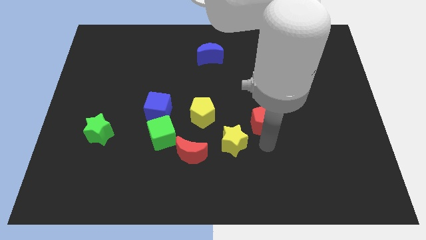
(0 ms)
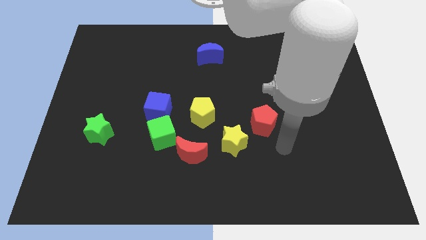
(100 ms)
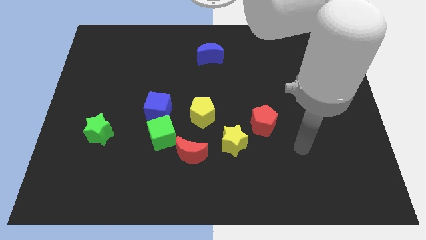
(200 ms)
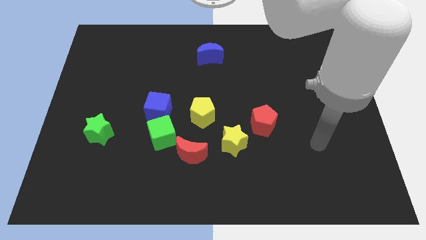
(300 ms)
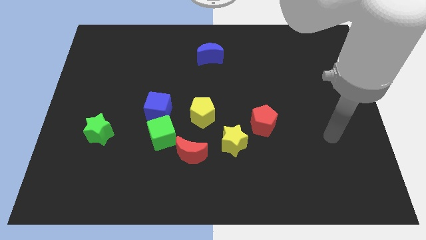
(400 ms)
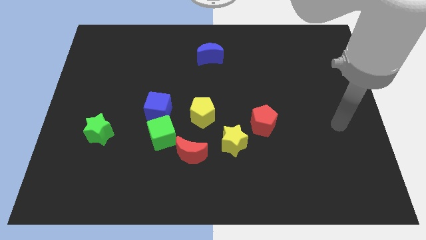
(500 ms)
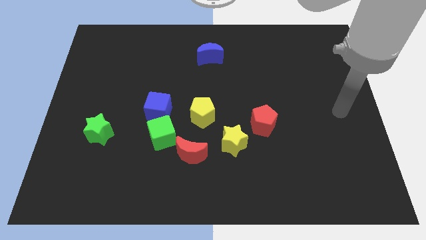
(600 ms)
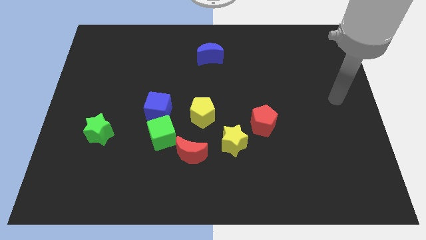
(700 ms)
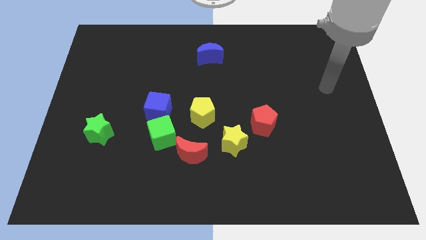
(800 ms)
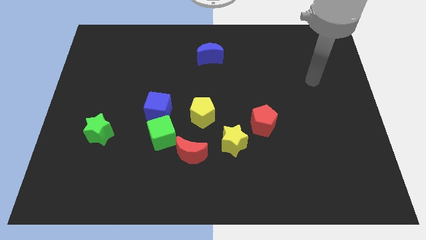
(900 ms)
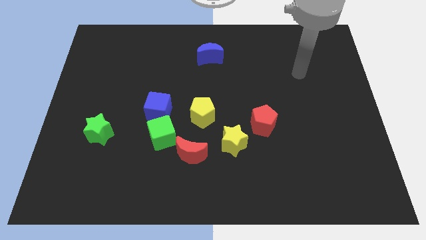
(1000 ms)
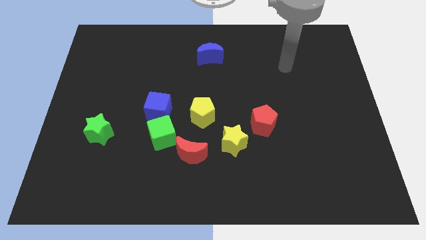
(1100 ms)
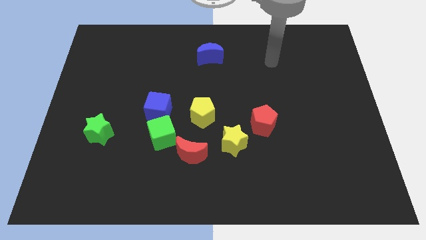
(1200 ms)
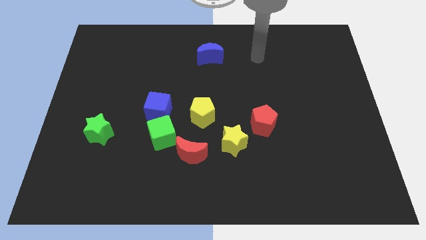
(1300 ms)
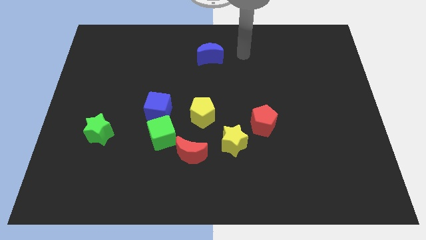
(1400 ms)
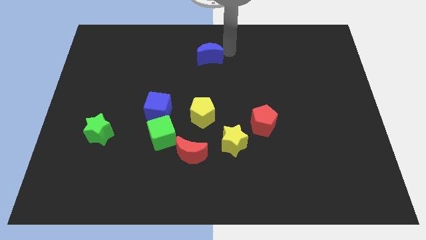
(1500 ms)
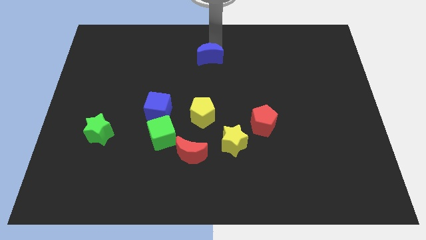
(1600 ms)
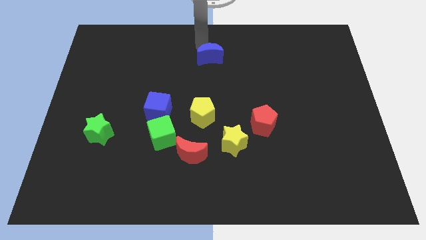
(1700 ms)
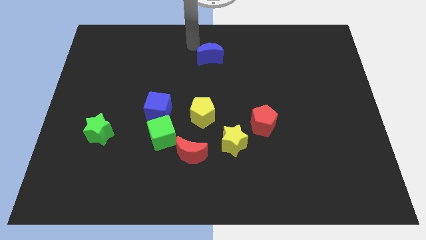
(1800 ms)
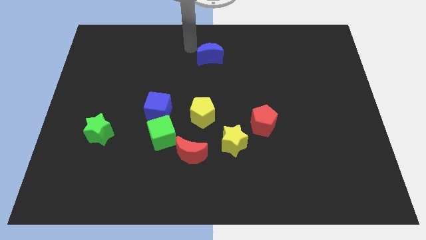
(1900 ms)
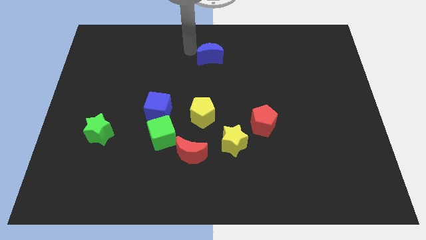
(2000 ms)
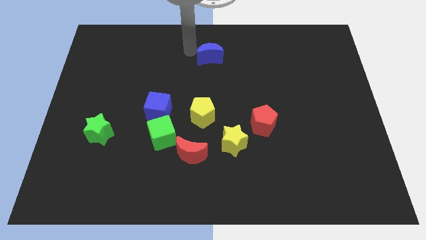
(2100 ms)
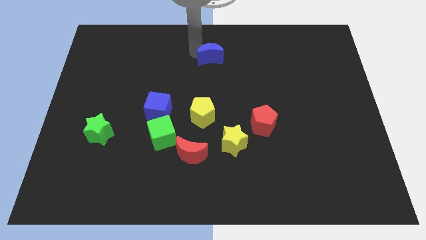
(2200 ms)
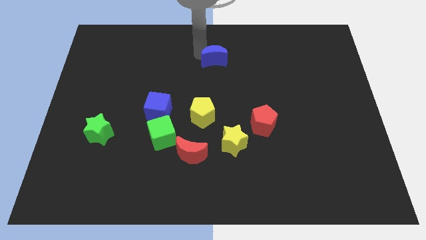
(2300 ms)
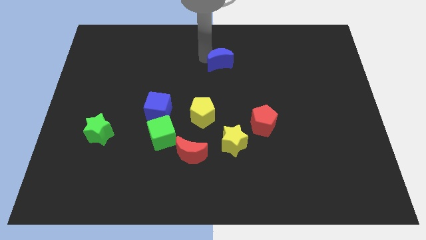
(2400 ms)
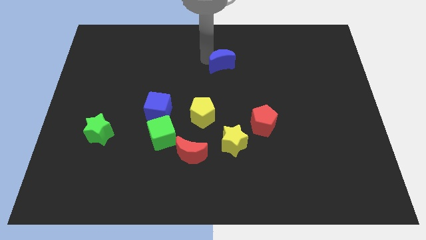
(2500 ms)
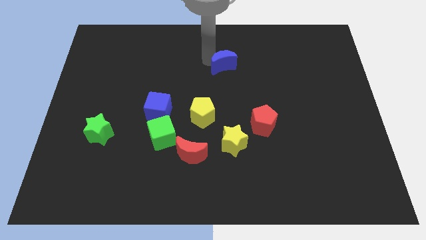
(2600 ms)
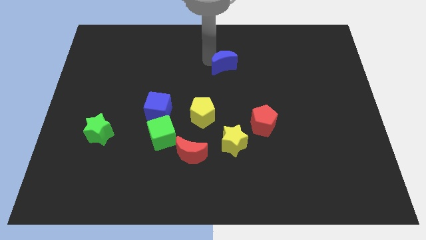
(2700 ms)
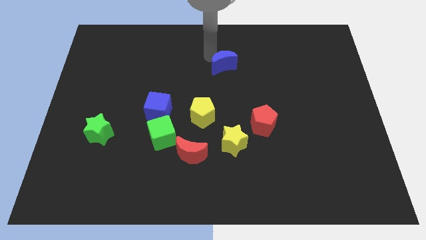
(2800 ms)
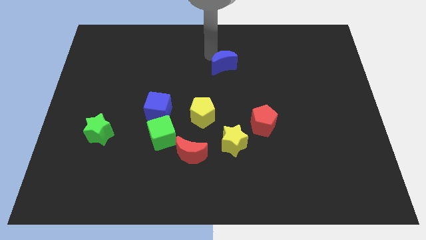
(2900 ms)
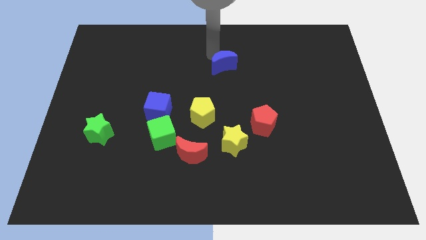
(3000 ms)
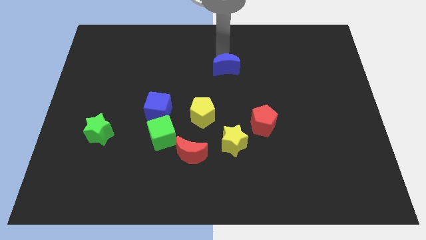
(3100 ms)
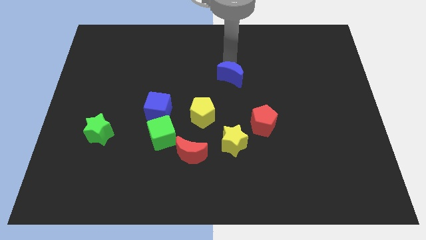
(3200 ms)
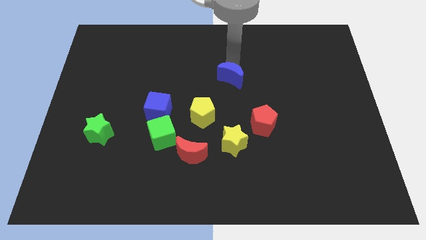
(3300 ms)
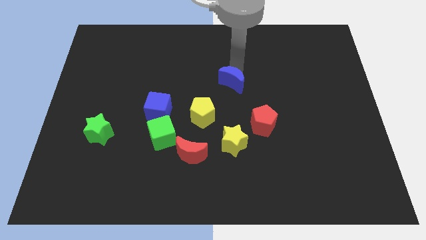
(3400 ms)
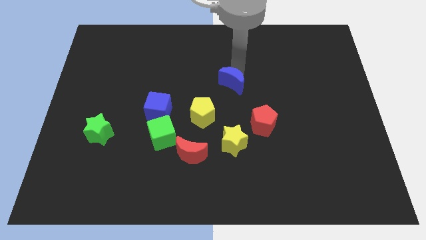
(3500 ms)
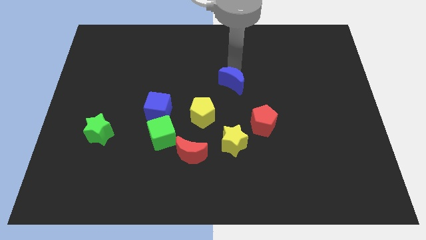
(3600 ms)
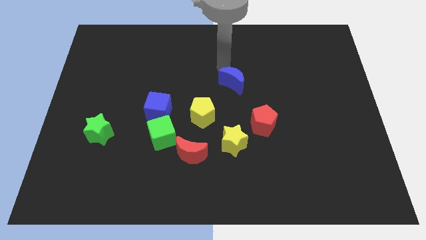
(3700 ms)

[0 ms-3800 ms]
move the blue moon diagonally top right to the yellow pentagon

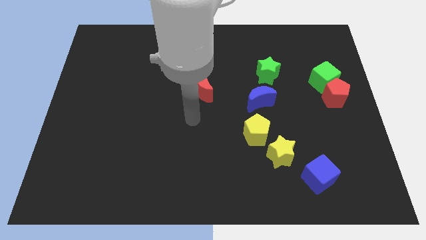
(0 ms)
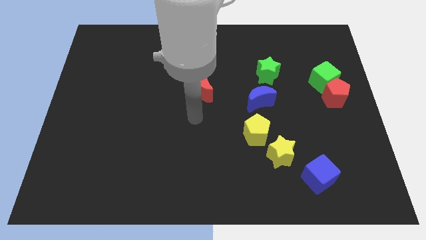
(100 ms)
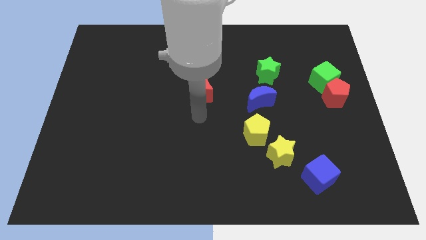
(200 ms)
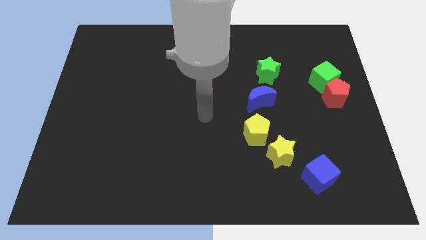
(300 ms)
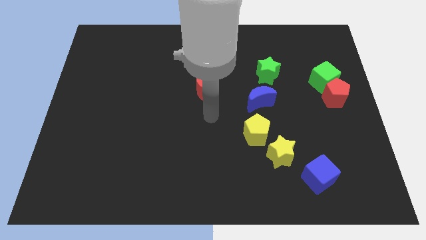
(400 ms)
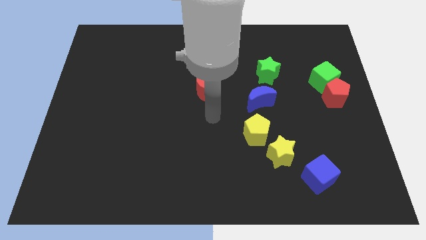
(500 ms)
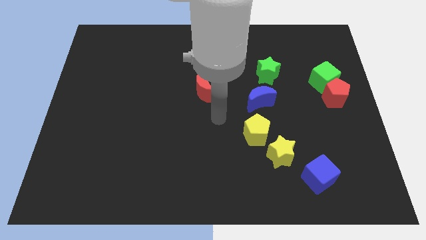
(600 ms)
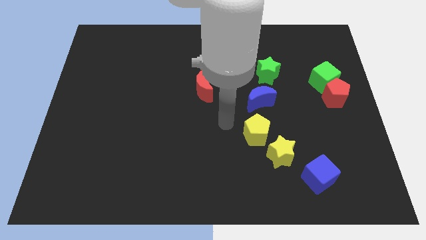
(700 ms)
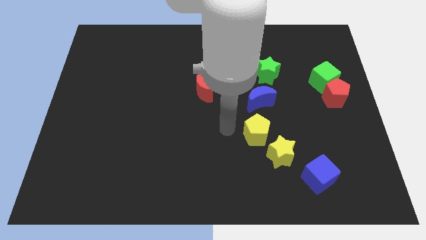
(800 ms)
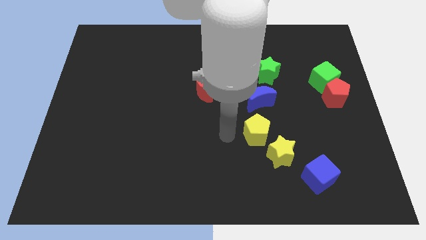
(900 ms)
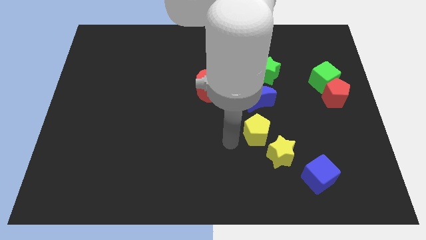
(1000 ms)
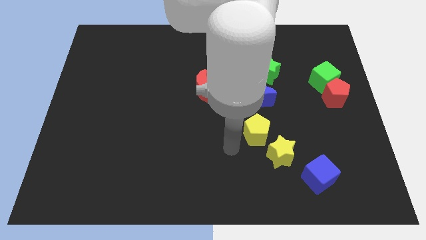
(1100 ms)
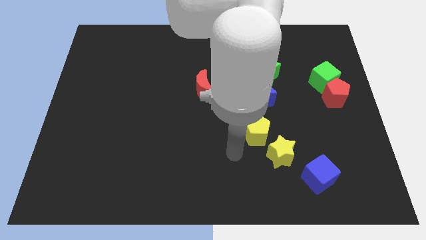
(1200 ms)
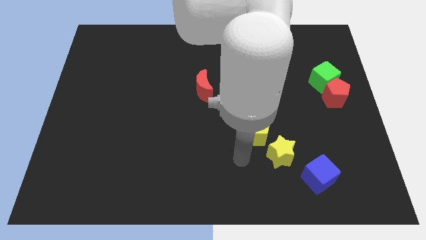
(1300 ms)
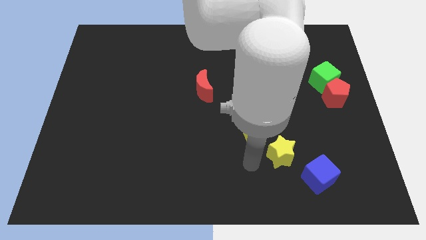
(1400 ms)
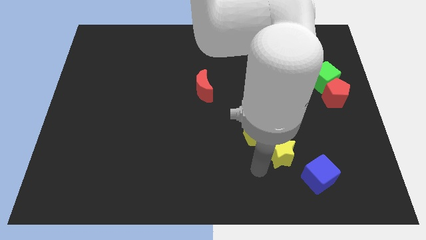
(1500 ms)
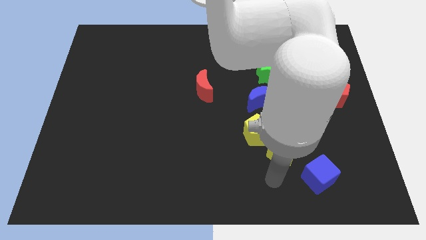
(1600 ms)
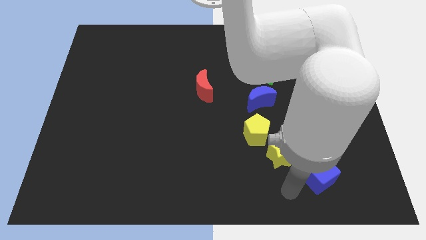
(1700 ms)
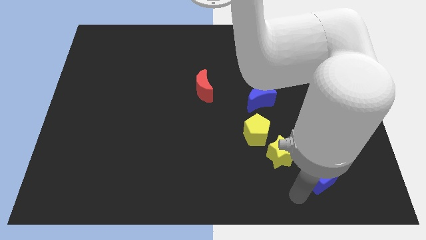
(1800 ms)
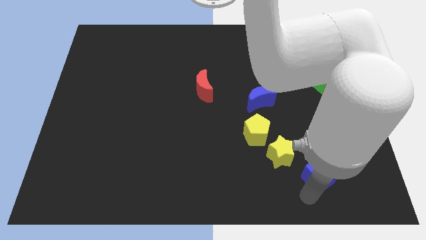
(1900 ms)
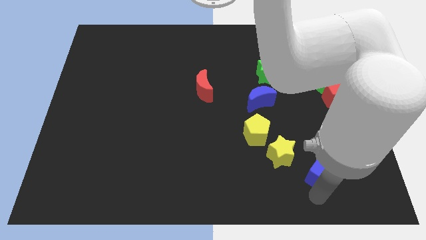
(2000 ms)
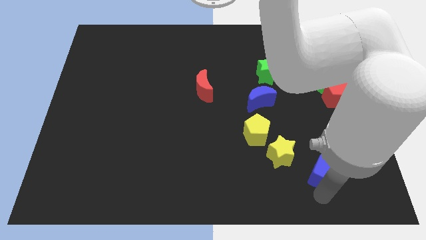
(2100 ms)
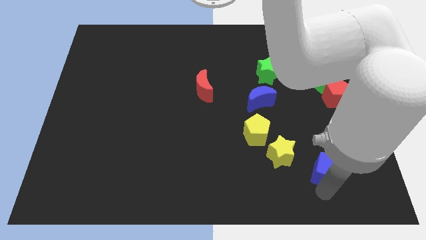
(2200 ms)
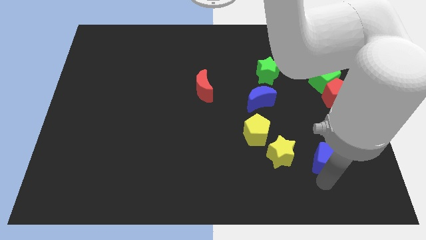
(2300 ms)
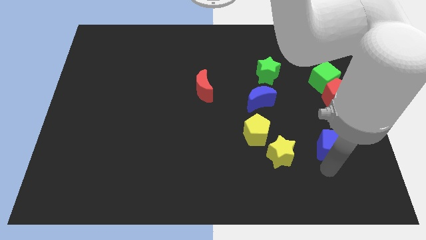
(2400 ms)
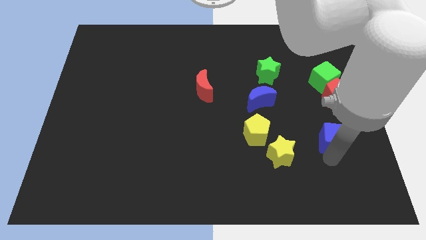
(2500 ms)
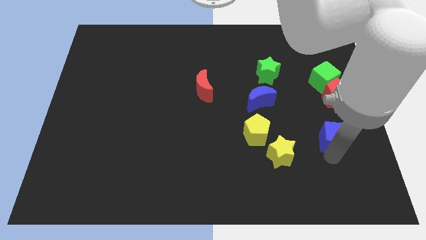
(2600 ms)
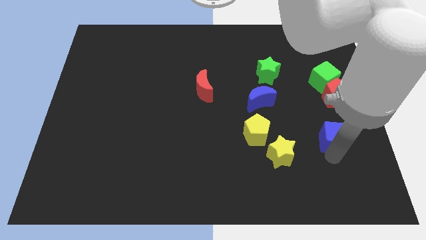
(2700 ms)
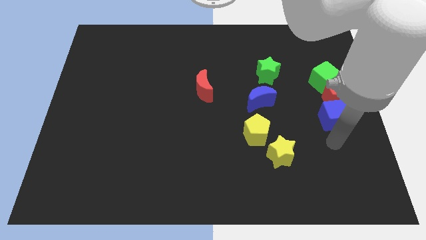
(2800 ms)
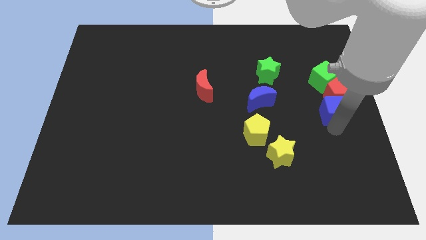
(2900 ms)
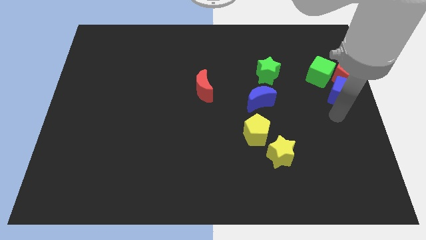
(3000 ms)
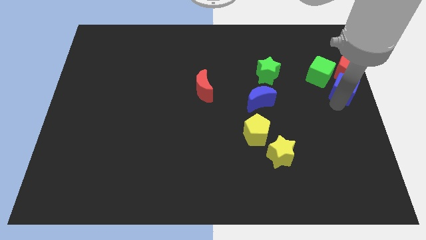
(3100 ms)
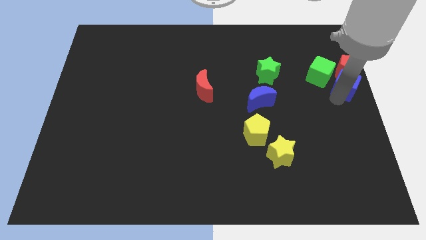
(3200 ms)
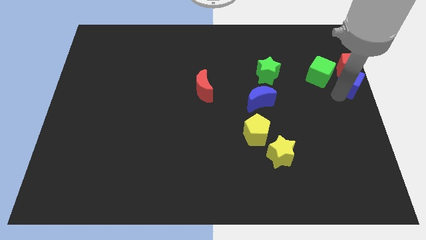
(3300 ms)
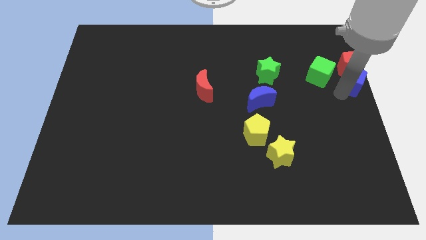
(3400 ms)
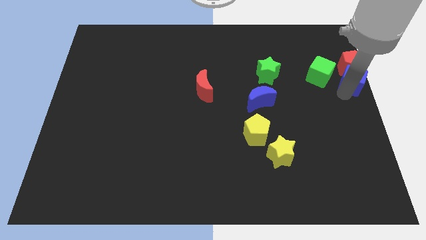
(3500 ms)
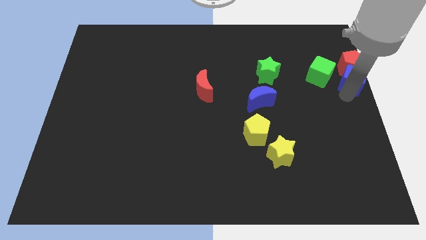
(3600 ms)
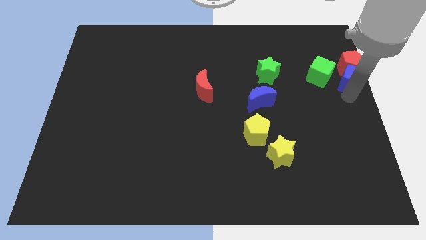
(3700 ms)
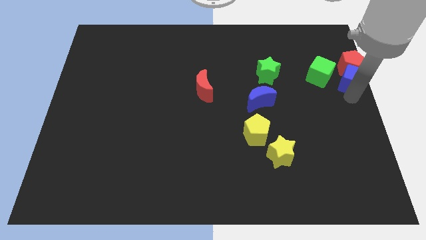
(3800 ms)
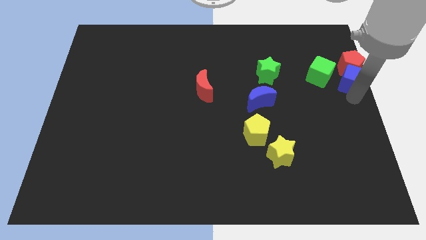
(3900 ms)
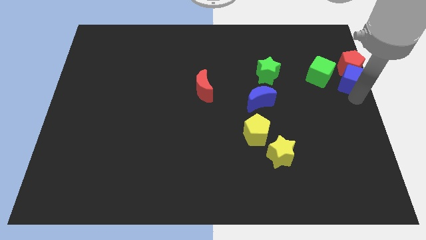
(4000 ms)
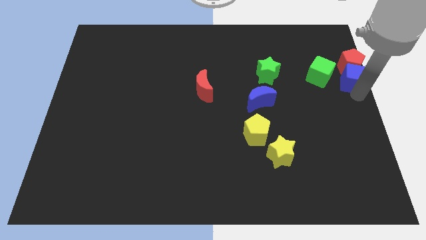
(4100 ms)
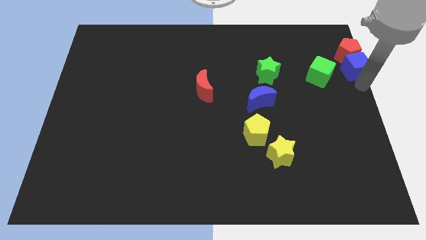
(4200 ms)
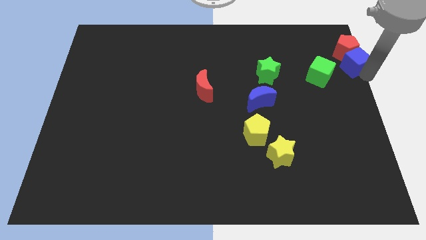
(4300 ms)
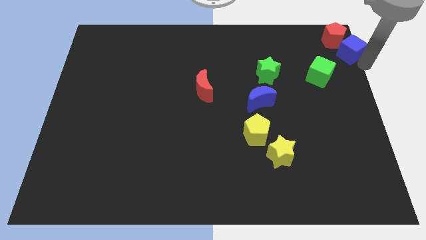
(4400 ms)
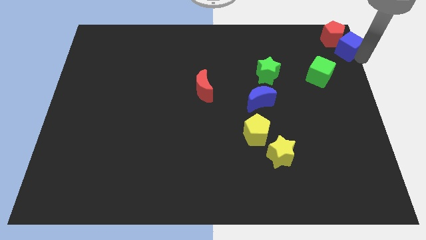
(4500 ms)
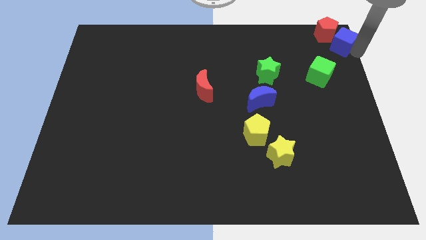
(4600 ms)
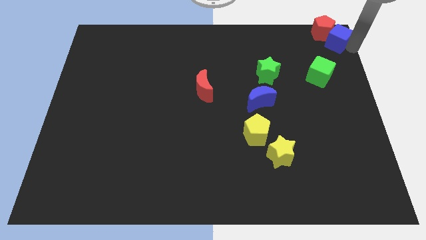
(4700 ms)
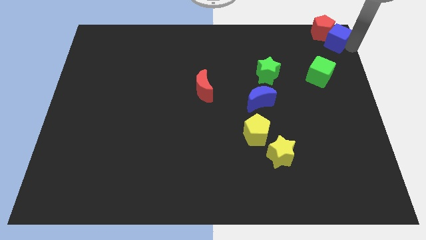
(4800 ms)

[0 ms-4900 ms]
push the blue cube and red pentagon to the top right corner

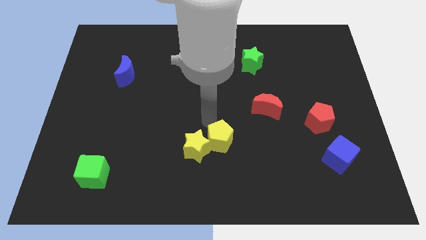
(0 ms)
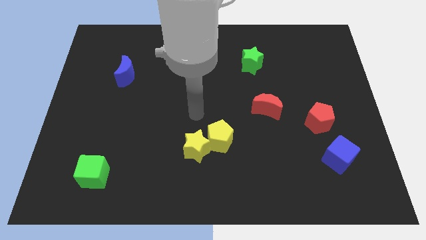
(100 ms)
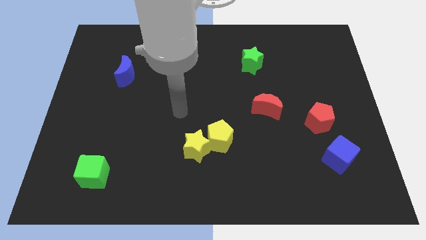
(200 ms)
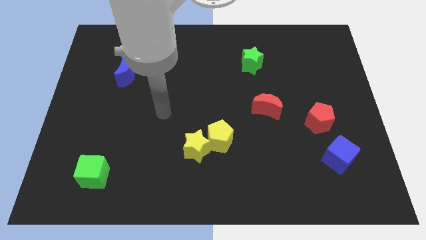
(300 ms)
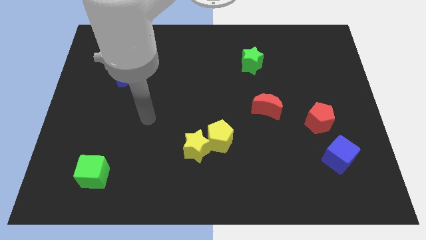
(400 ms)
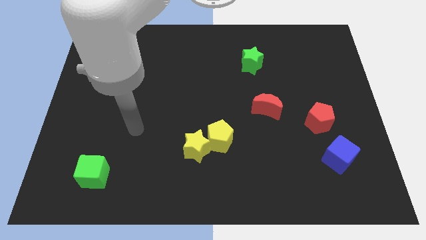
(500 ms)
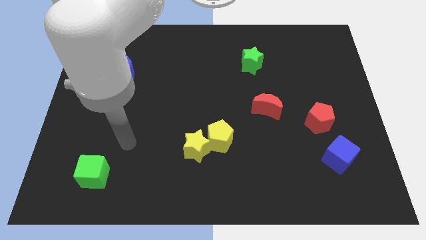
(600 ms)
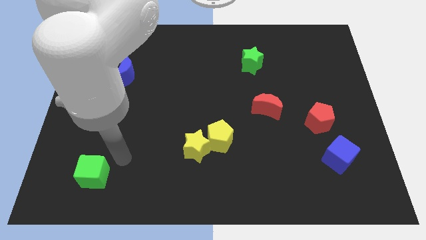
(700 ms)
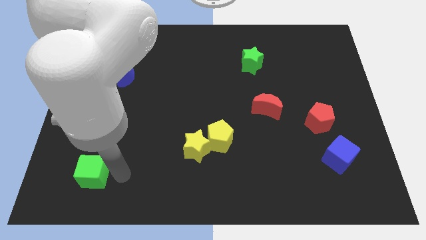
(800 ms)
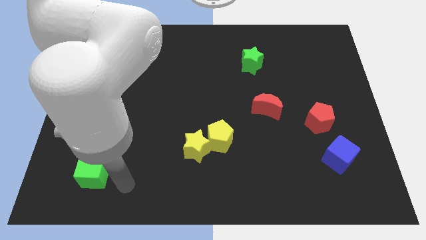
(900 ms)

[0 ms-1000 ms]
place your arm to the right of green cube
